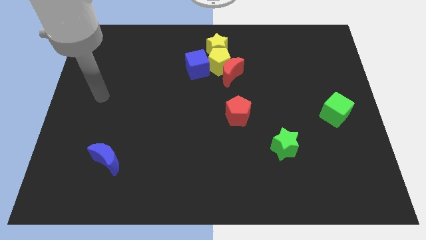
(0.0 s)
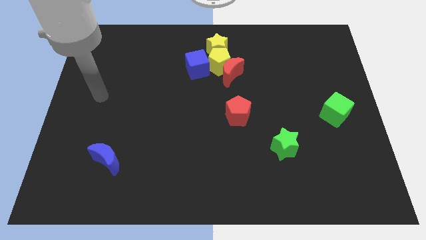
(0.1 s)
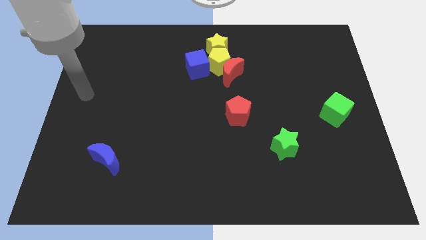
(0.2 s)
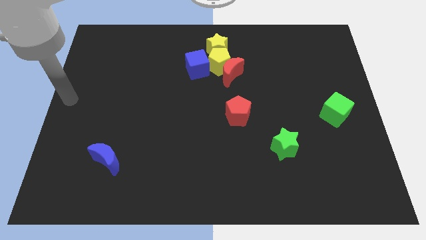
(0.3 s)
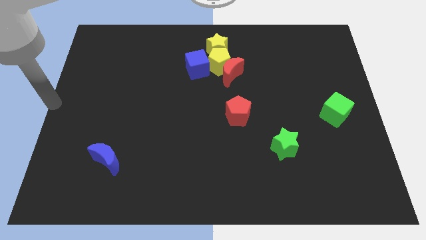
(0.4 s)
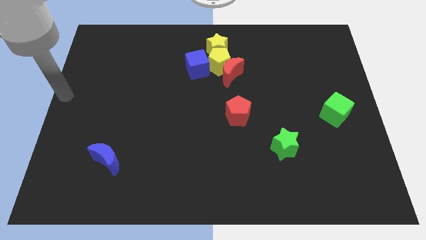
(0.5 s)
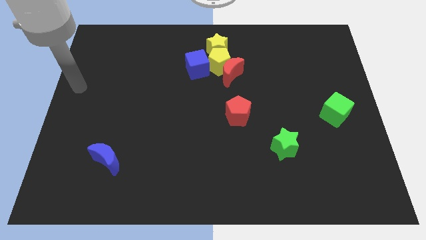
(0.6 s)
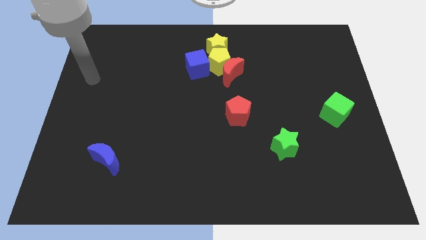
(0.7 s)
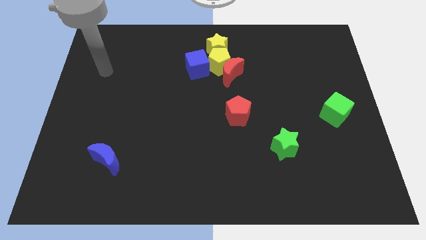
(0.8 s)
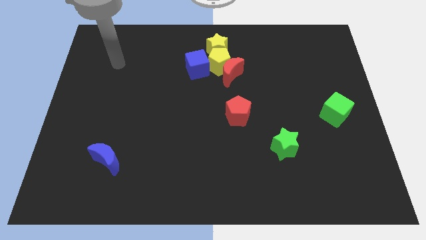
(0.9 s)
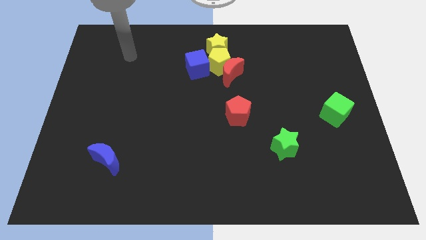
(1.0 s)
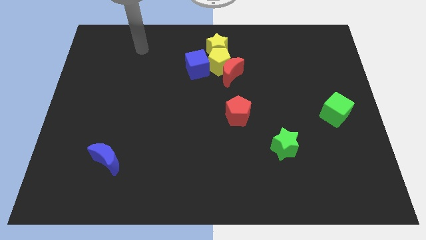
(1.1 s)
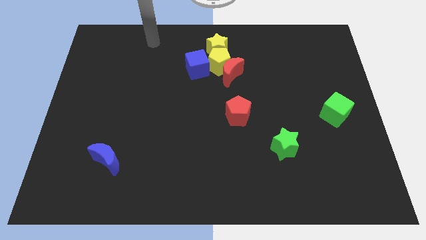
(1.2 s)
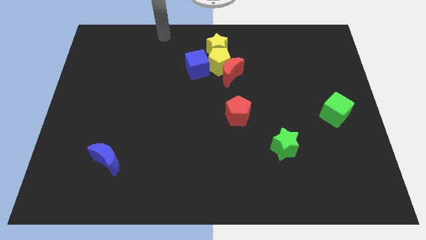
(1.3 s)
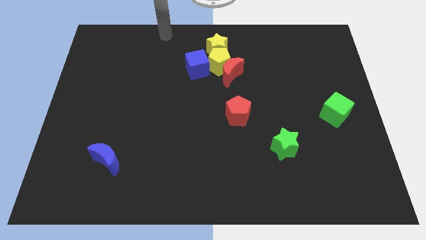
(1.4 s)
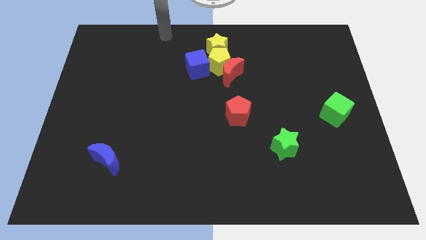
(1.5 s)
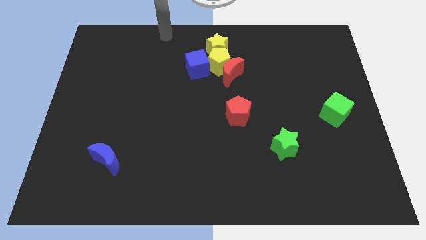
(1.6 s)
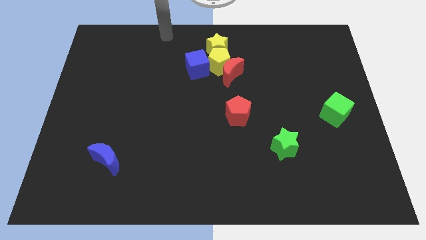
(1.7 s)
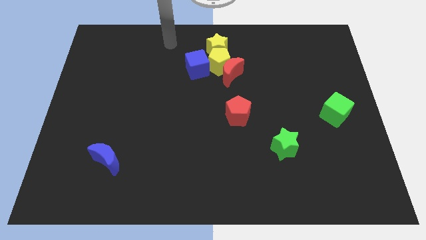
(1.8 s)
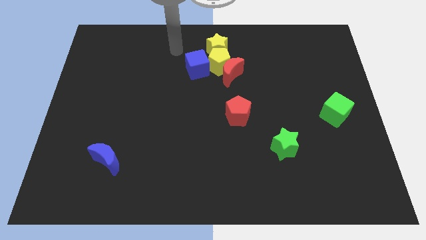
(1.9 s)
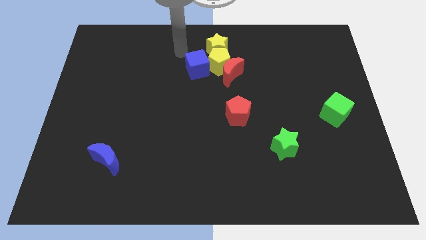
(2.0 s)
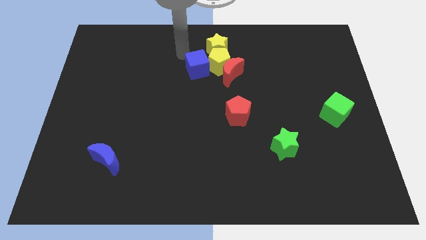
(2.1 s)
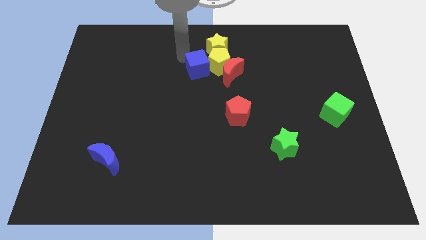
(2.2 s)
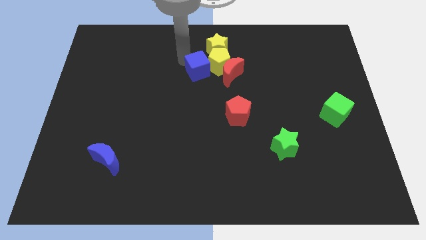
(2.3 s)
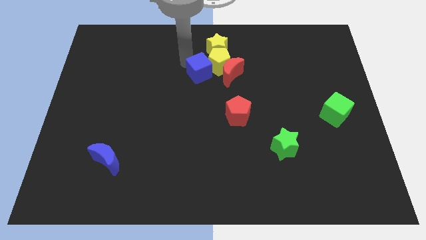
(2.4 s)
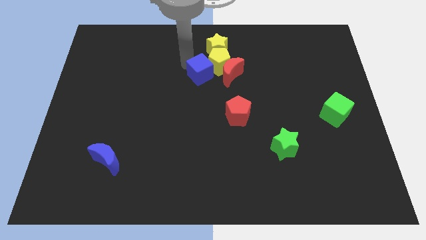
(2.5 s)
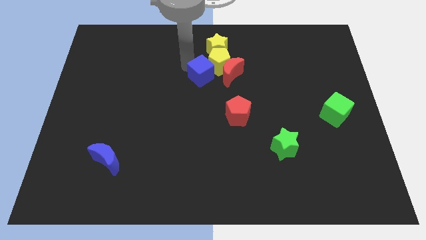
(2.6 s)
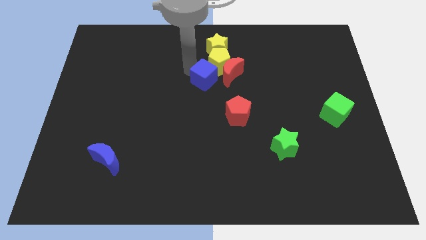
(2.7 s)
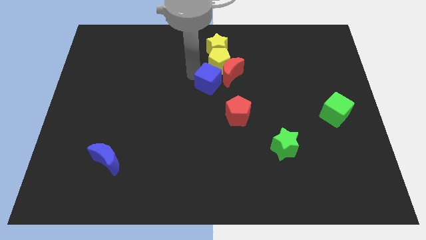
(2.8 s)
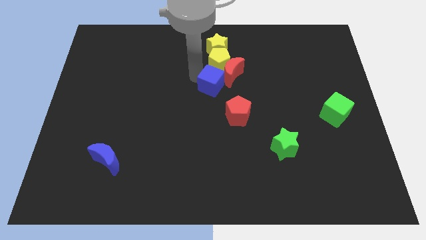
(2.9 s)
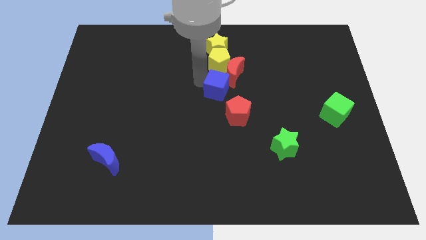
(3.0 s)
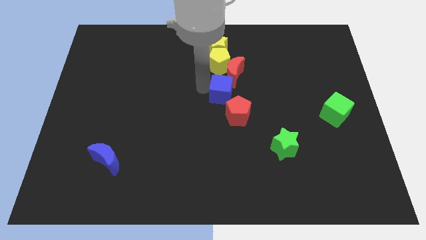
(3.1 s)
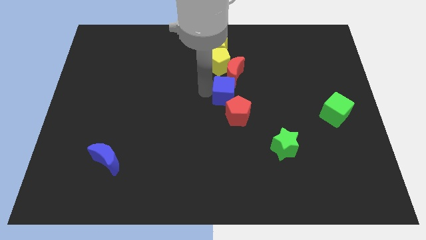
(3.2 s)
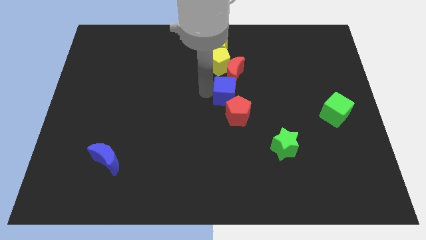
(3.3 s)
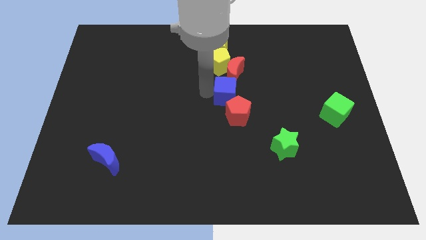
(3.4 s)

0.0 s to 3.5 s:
place the blue cube on top of red pentagon

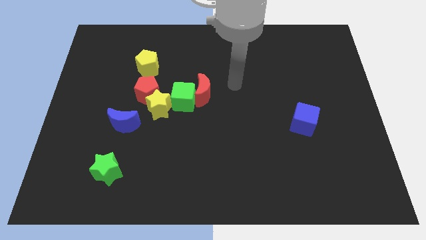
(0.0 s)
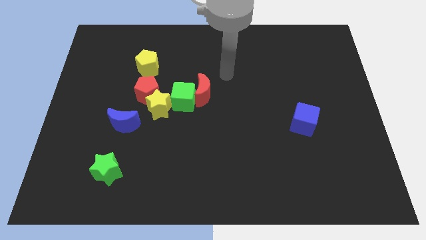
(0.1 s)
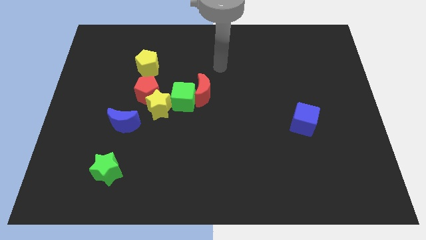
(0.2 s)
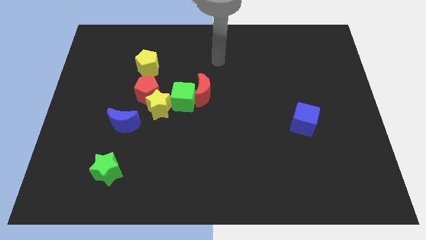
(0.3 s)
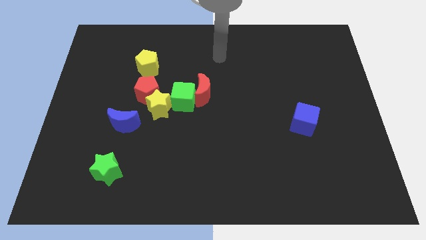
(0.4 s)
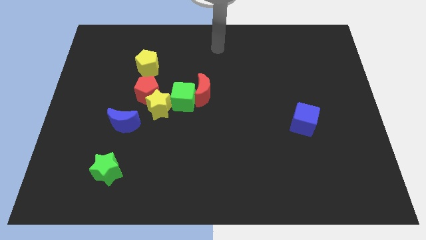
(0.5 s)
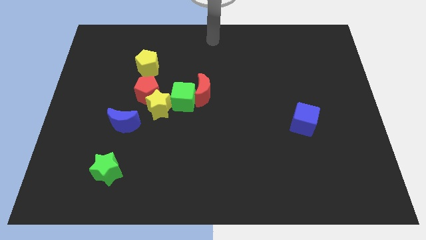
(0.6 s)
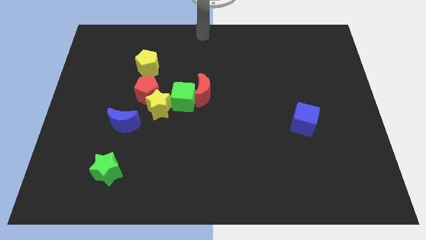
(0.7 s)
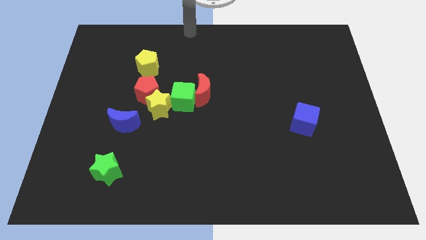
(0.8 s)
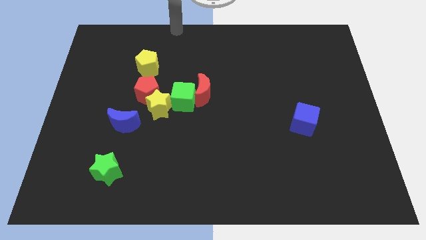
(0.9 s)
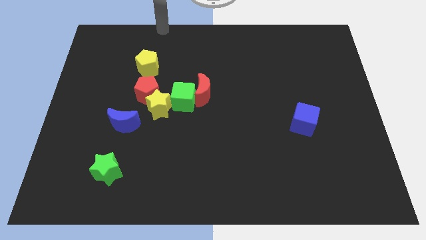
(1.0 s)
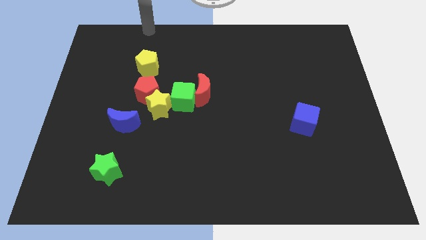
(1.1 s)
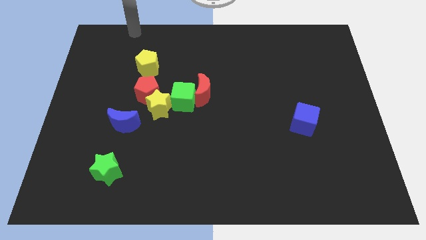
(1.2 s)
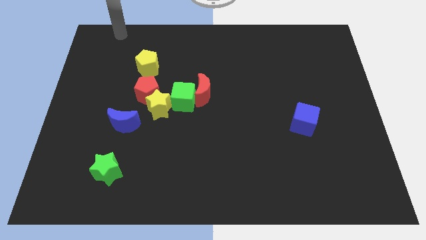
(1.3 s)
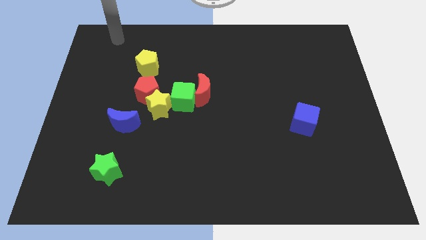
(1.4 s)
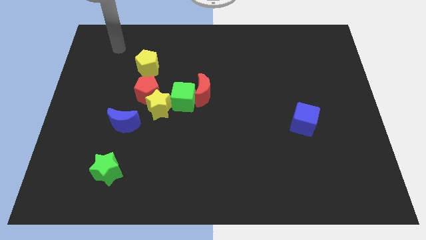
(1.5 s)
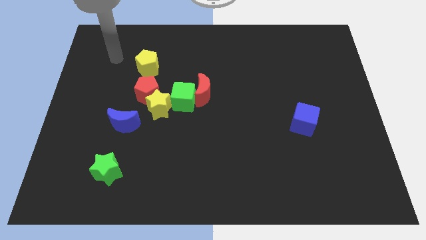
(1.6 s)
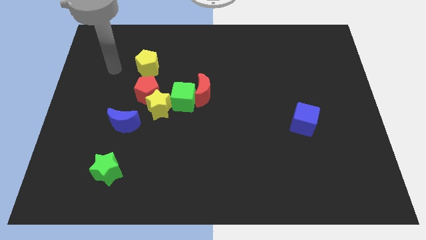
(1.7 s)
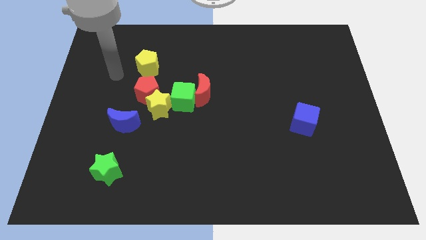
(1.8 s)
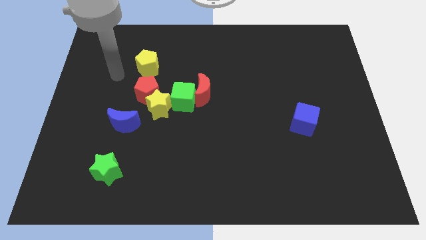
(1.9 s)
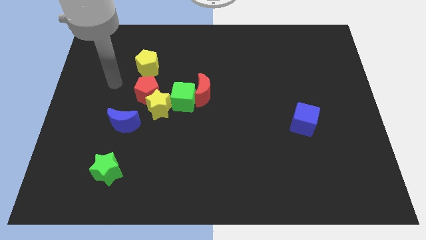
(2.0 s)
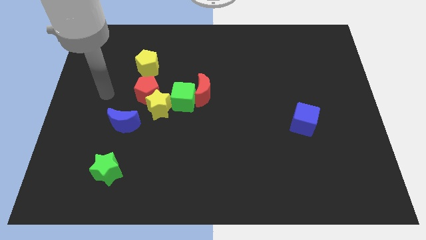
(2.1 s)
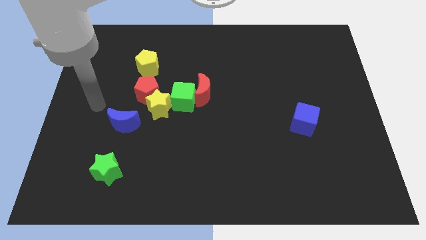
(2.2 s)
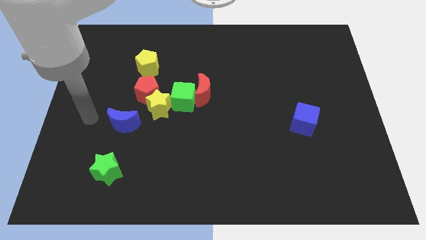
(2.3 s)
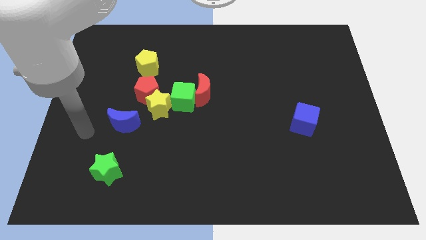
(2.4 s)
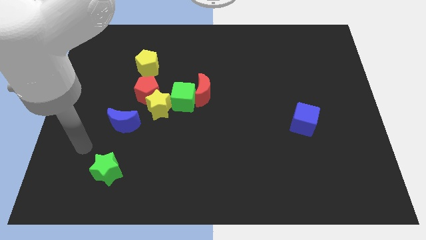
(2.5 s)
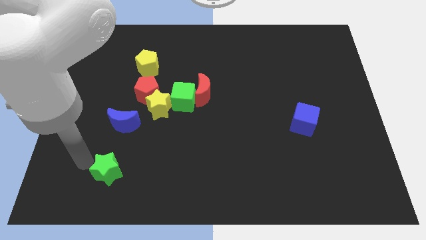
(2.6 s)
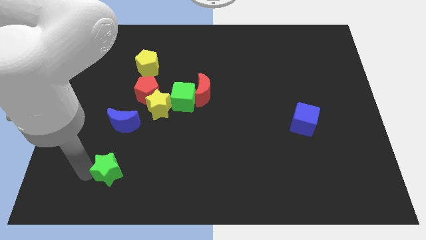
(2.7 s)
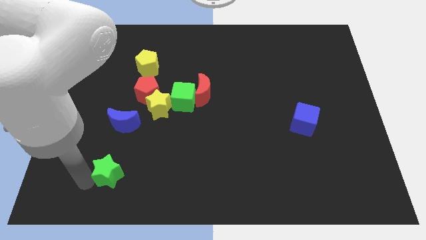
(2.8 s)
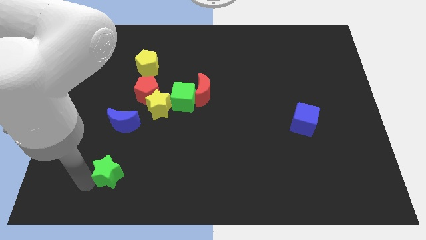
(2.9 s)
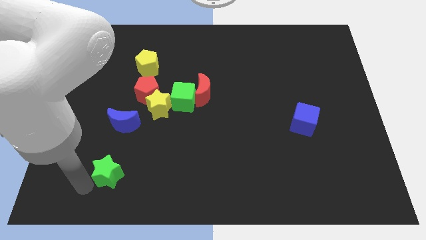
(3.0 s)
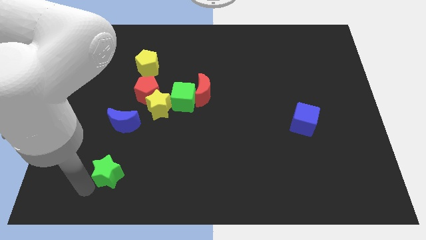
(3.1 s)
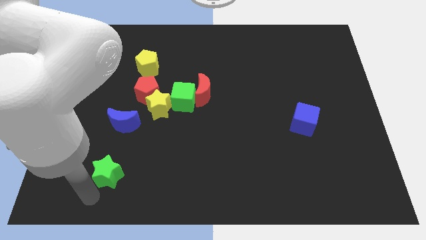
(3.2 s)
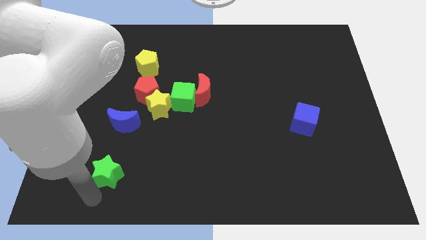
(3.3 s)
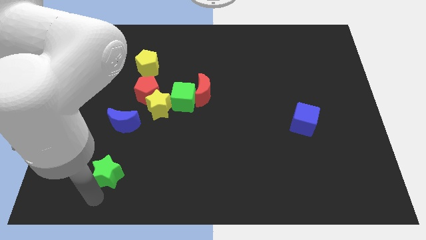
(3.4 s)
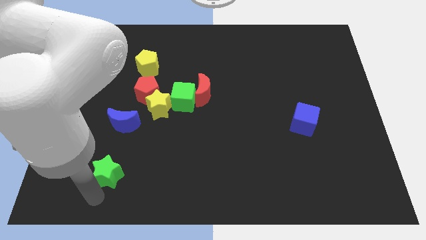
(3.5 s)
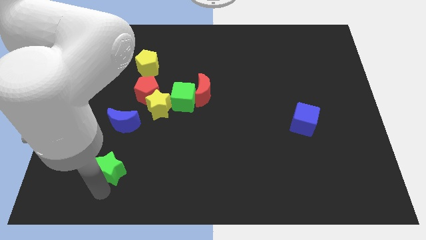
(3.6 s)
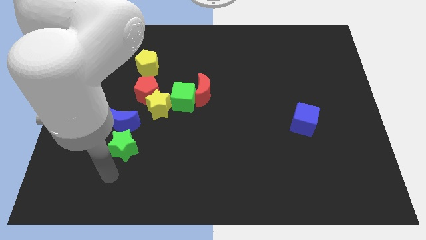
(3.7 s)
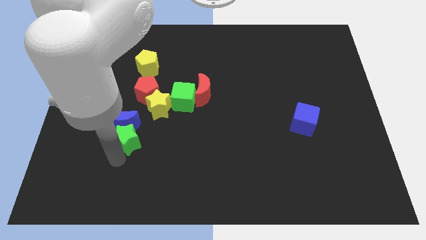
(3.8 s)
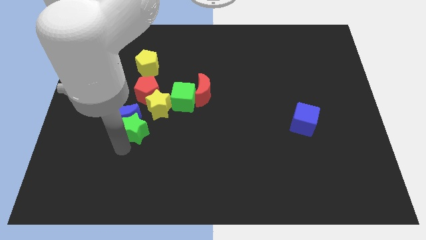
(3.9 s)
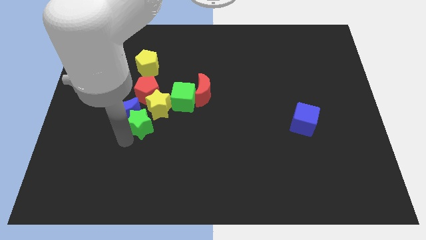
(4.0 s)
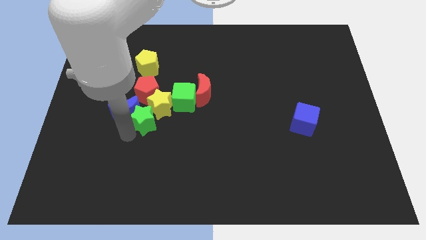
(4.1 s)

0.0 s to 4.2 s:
push the green star into the yellow star

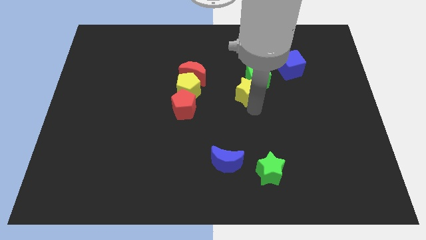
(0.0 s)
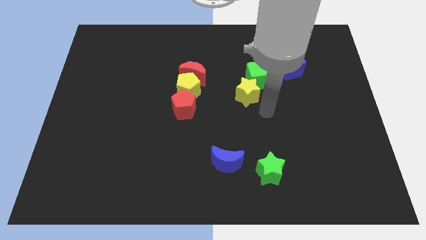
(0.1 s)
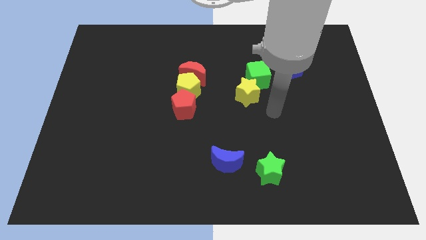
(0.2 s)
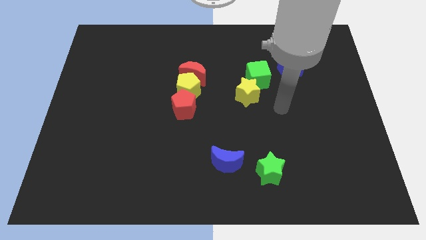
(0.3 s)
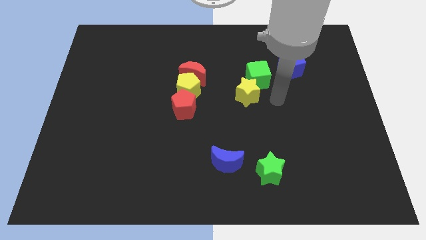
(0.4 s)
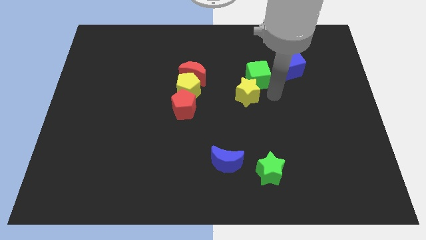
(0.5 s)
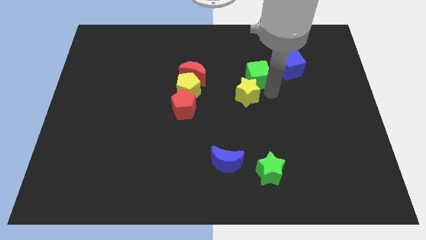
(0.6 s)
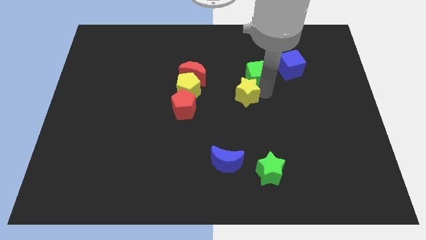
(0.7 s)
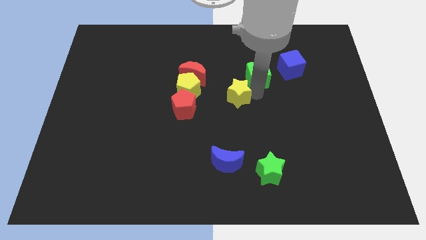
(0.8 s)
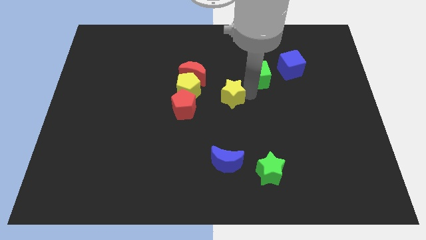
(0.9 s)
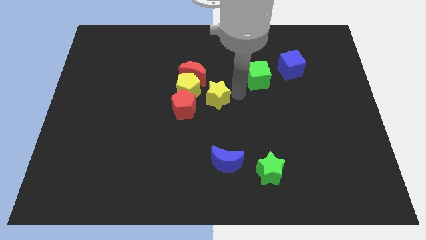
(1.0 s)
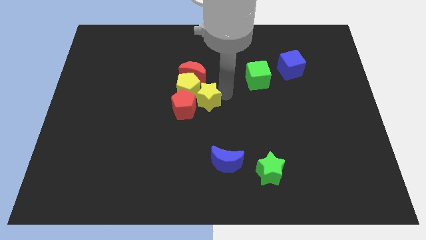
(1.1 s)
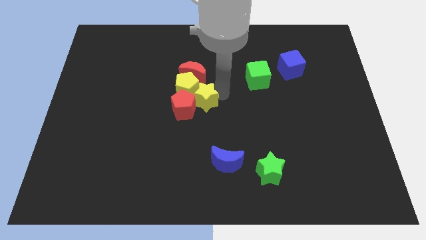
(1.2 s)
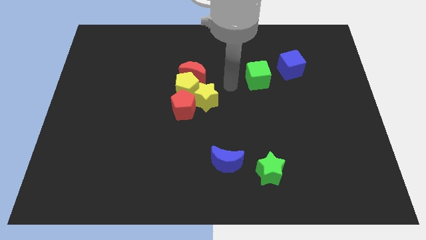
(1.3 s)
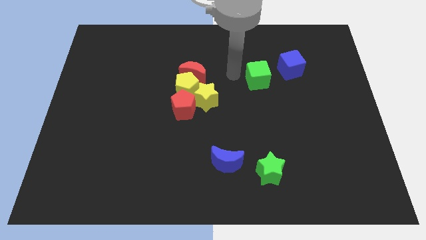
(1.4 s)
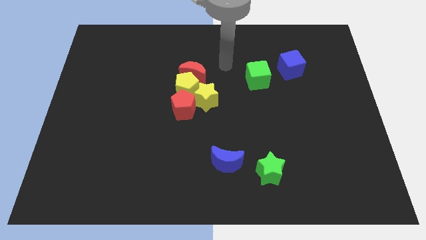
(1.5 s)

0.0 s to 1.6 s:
push the yellow star towards the red pentagon
